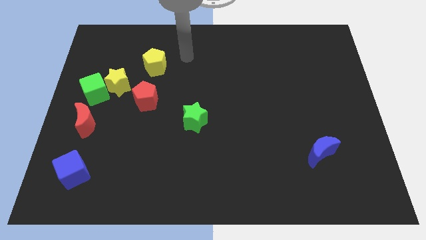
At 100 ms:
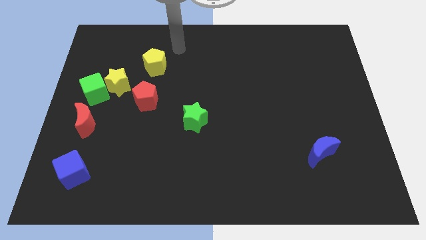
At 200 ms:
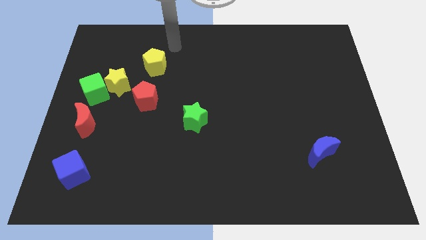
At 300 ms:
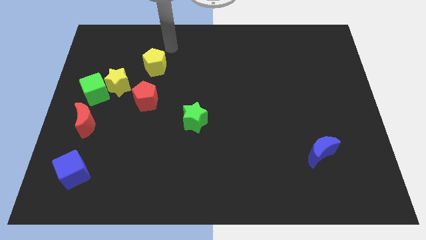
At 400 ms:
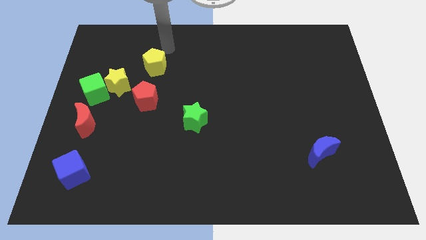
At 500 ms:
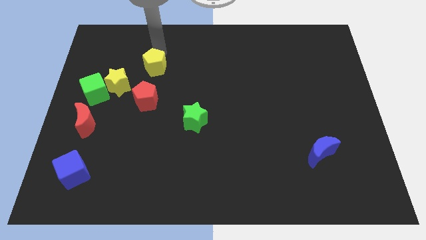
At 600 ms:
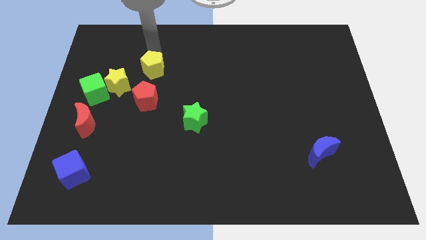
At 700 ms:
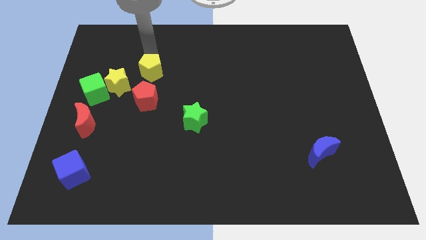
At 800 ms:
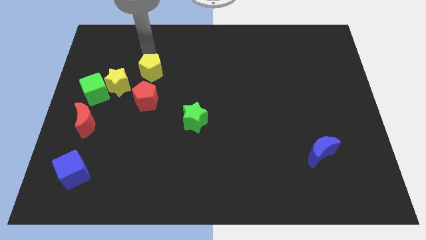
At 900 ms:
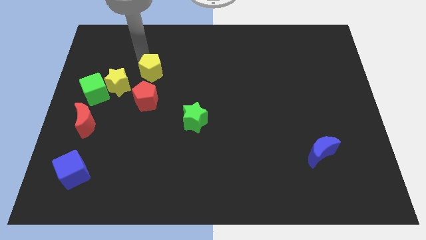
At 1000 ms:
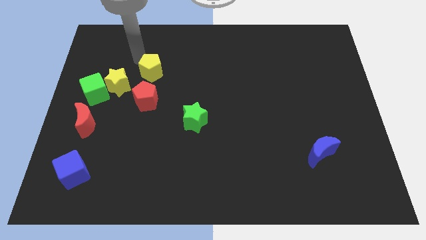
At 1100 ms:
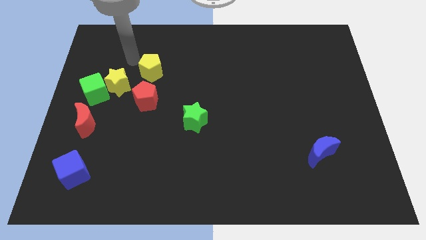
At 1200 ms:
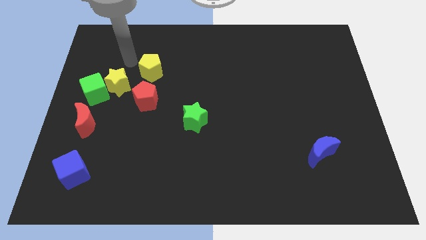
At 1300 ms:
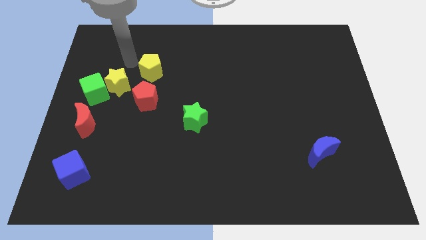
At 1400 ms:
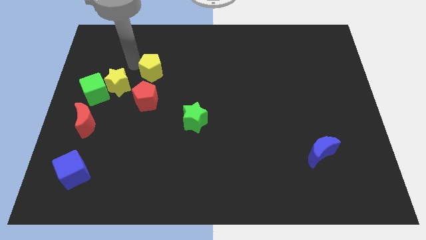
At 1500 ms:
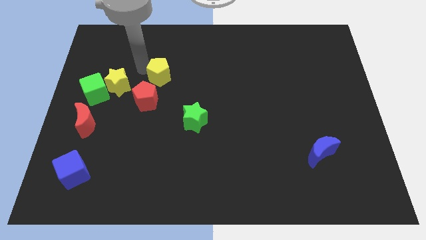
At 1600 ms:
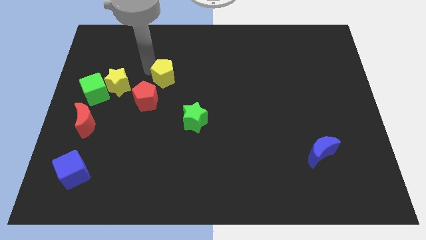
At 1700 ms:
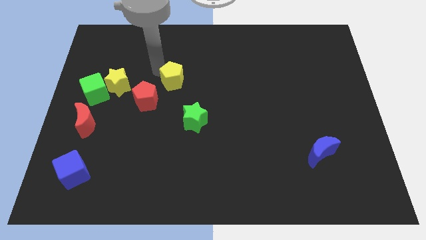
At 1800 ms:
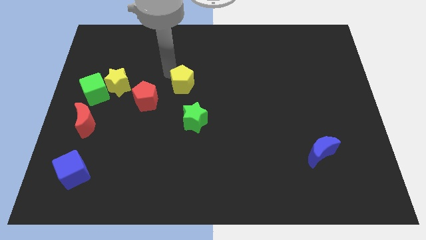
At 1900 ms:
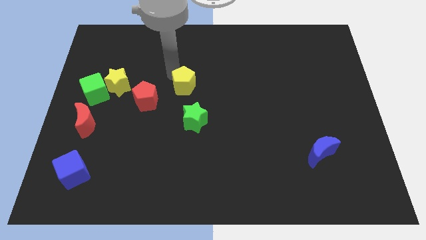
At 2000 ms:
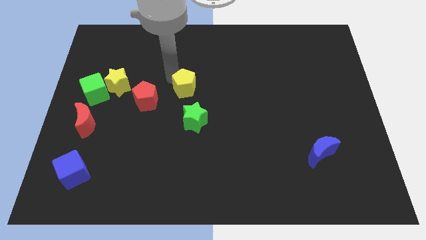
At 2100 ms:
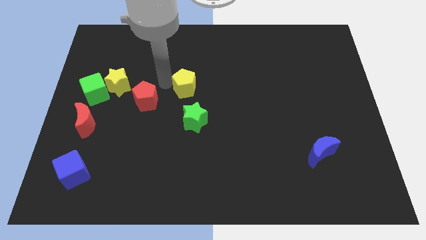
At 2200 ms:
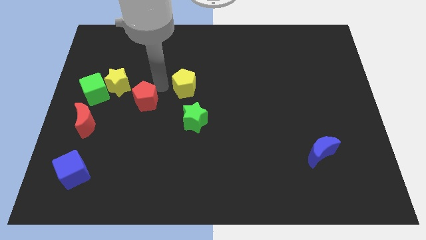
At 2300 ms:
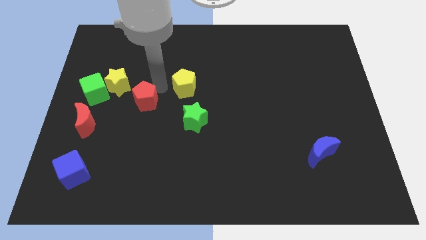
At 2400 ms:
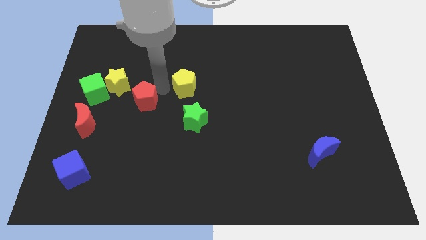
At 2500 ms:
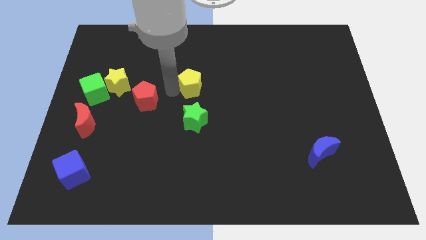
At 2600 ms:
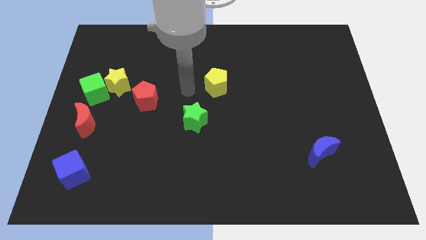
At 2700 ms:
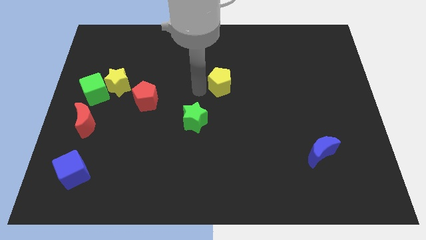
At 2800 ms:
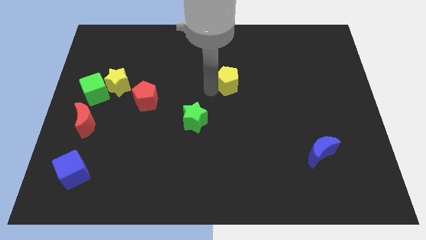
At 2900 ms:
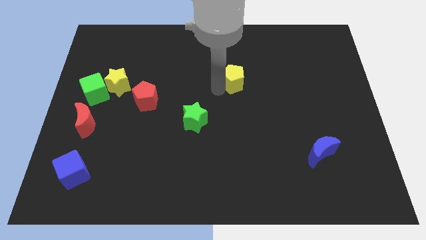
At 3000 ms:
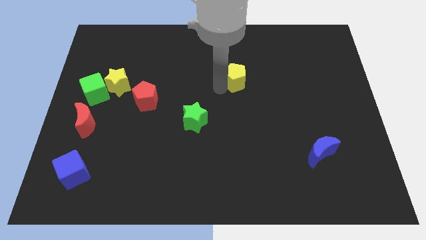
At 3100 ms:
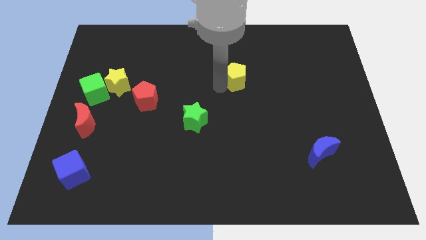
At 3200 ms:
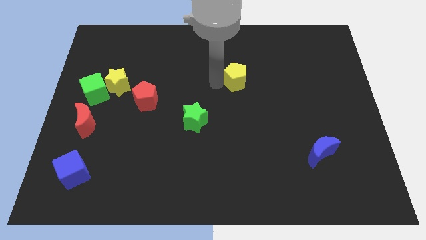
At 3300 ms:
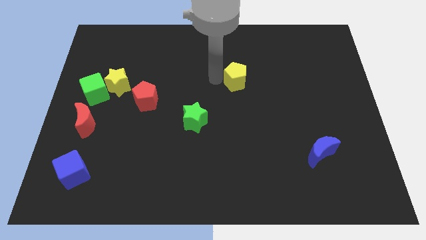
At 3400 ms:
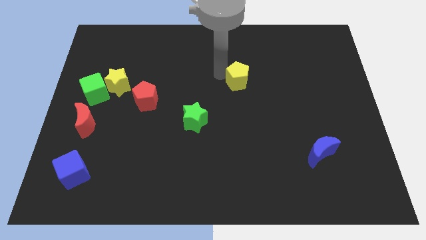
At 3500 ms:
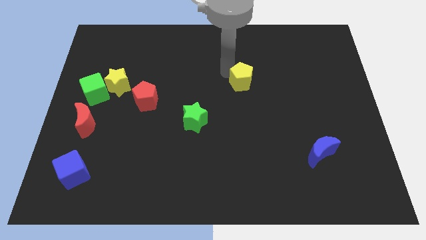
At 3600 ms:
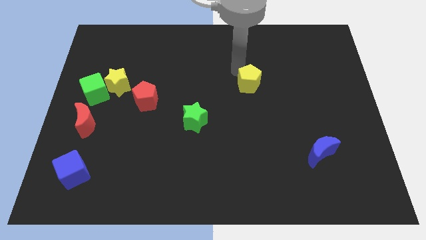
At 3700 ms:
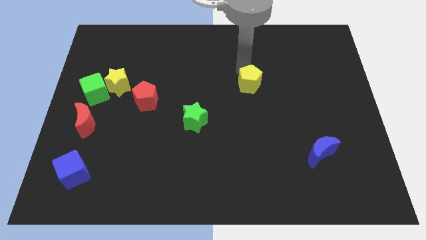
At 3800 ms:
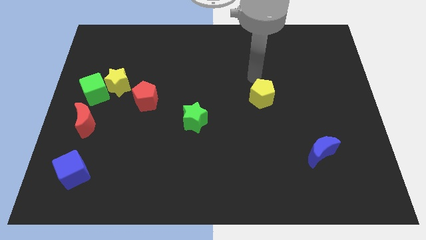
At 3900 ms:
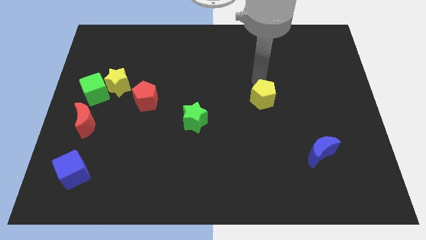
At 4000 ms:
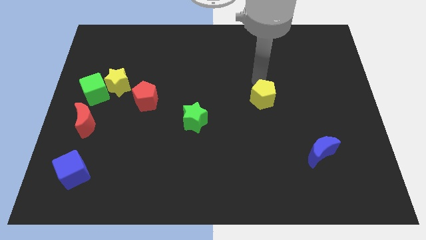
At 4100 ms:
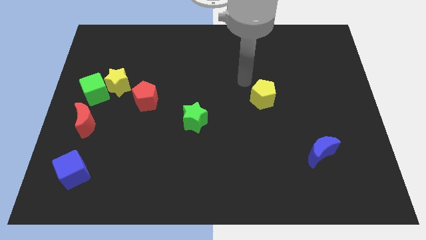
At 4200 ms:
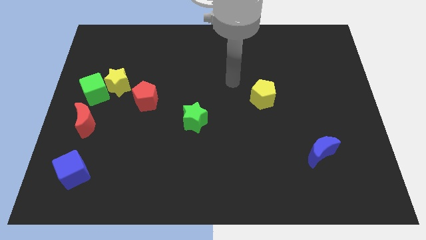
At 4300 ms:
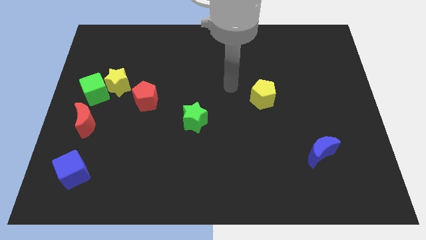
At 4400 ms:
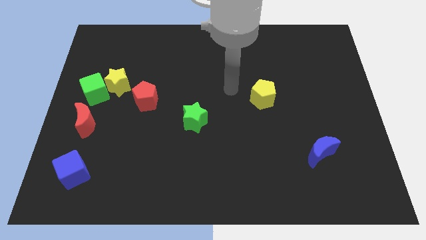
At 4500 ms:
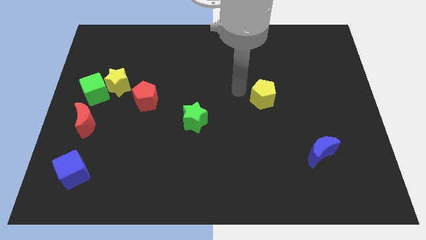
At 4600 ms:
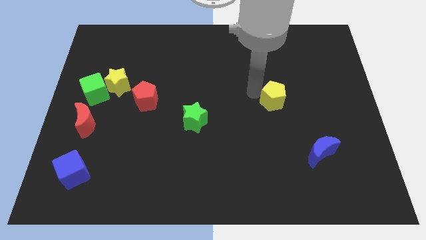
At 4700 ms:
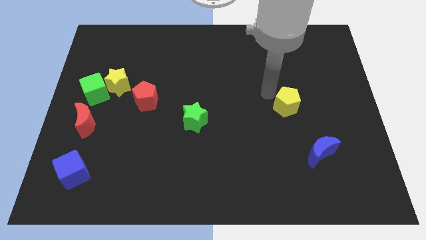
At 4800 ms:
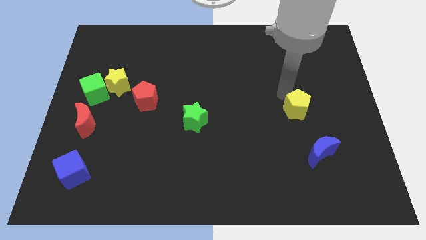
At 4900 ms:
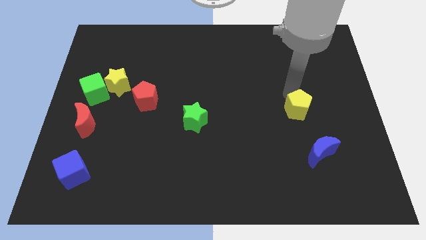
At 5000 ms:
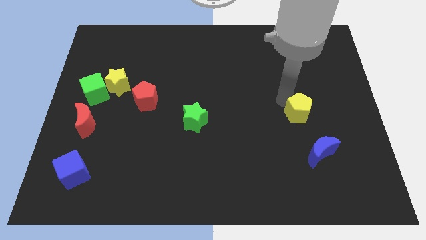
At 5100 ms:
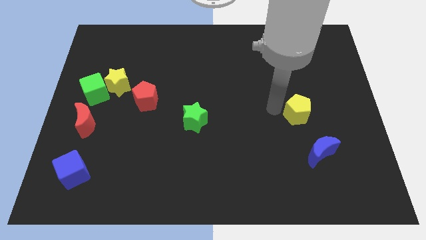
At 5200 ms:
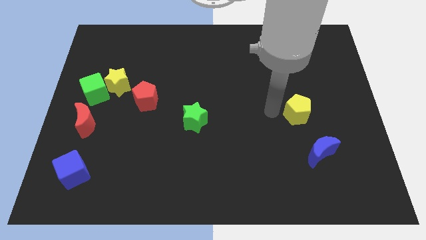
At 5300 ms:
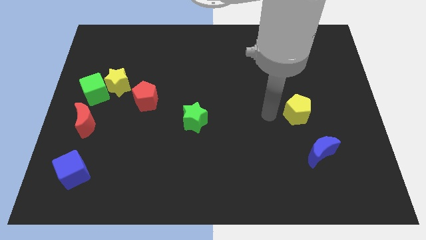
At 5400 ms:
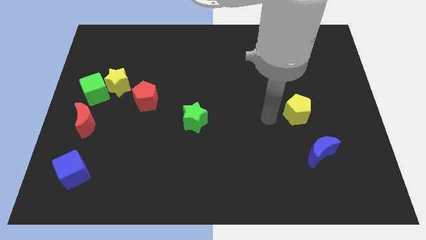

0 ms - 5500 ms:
place yellow pentagon to the right of green star

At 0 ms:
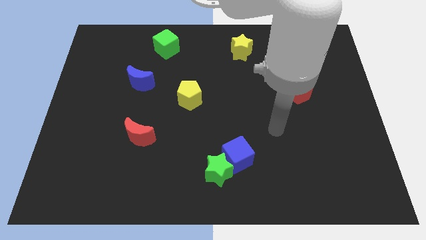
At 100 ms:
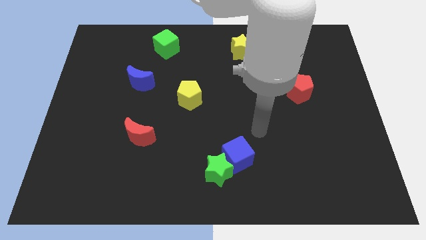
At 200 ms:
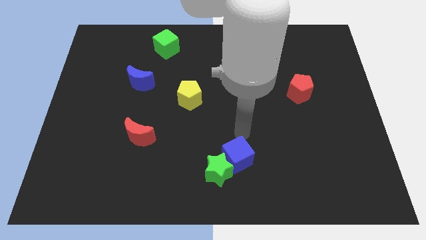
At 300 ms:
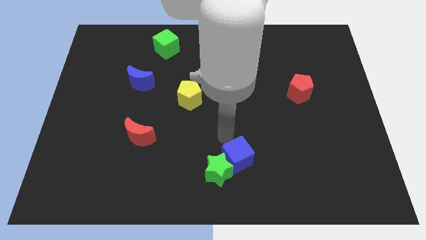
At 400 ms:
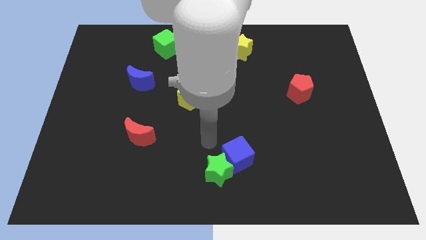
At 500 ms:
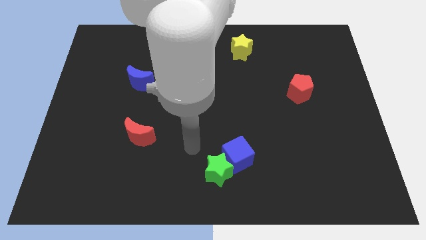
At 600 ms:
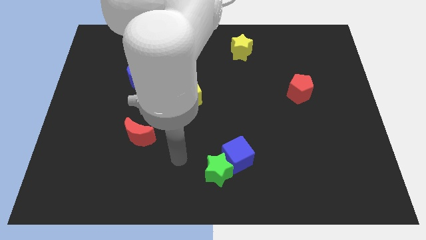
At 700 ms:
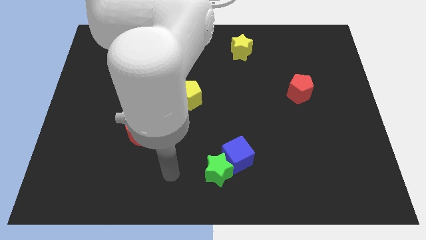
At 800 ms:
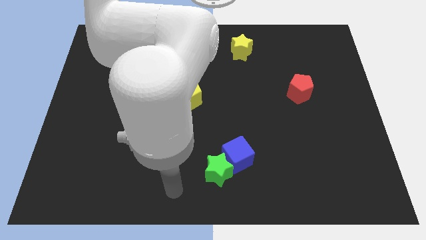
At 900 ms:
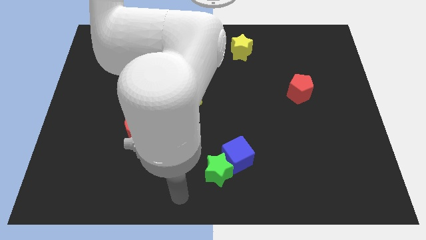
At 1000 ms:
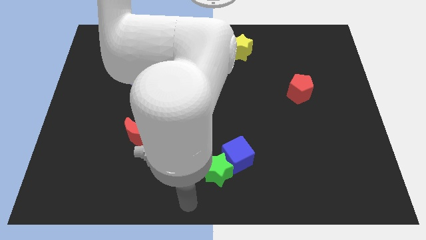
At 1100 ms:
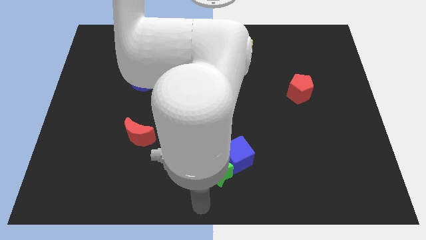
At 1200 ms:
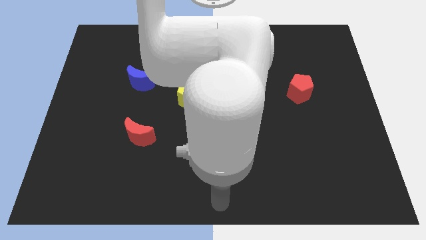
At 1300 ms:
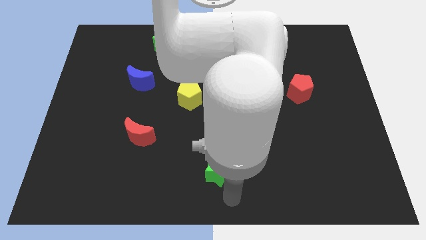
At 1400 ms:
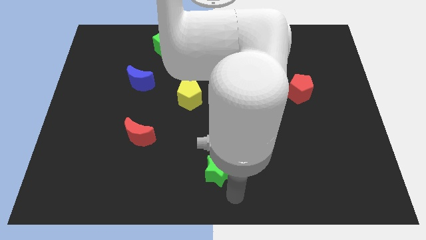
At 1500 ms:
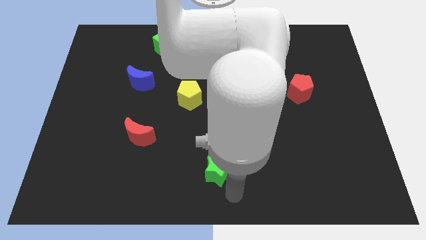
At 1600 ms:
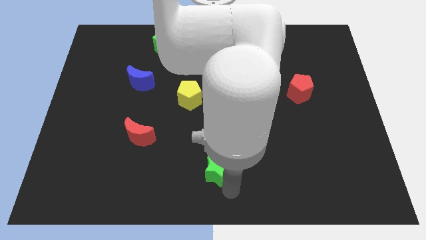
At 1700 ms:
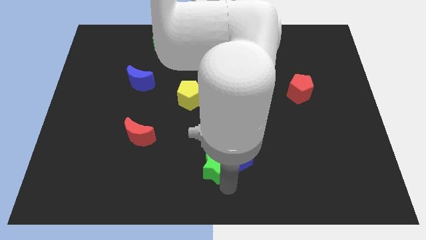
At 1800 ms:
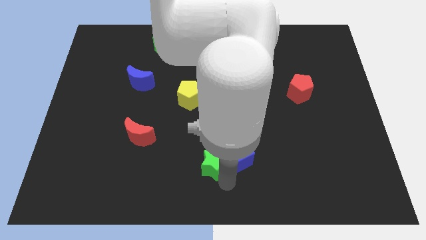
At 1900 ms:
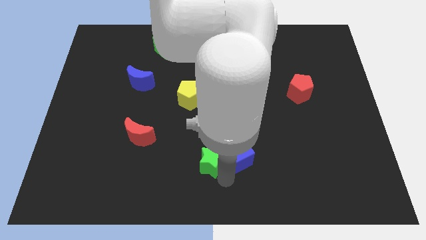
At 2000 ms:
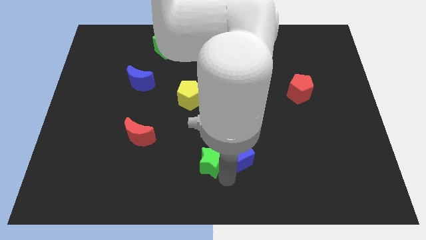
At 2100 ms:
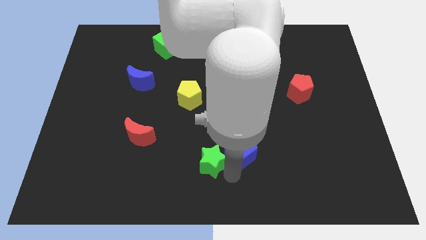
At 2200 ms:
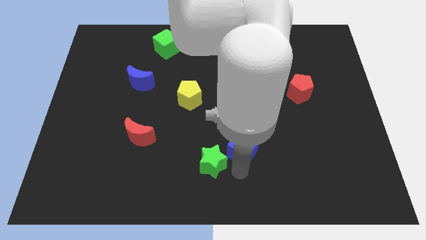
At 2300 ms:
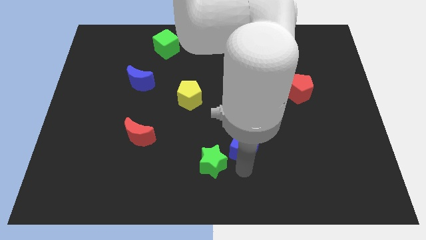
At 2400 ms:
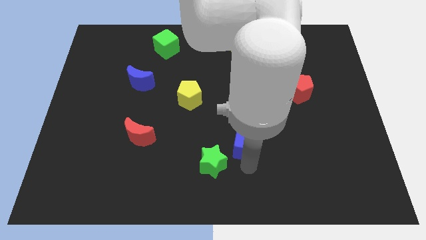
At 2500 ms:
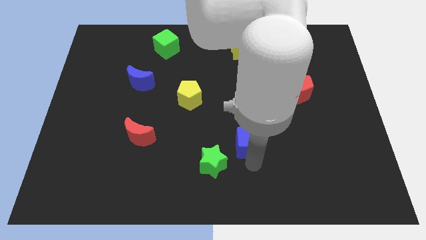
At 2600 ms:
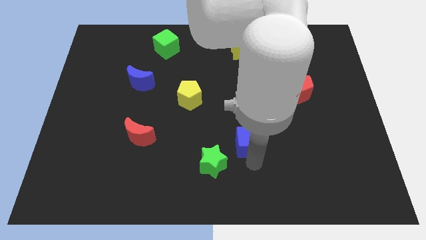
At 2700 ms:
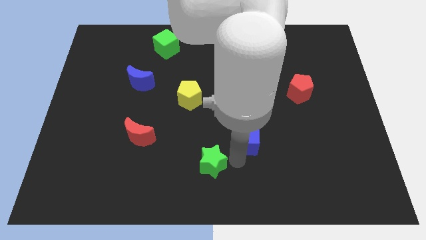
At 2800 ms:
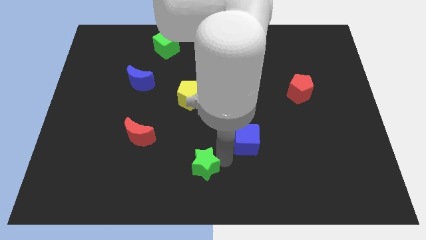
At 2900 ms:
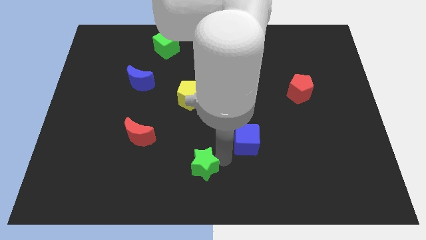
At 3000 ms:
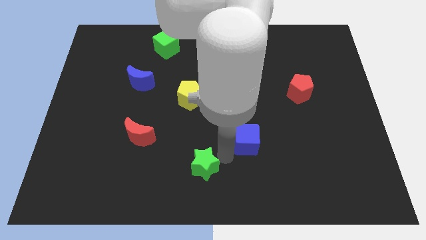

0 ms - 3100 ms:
slightly move the green star diagonally down

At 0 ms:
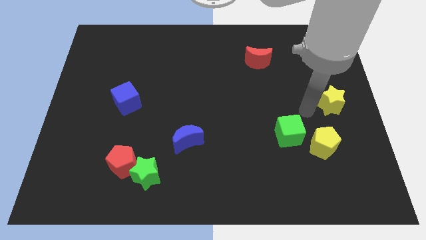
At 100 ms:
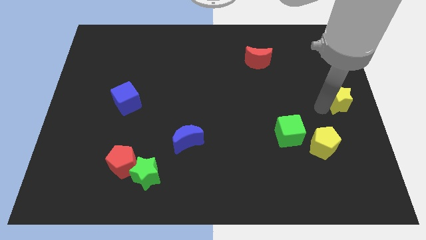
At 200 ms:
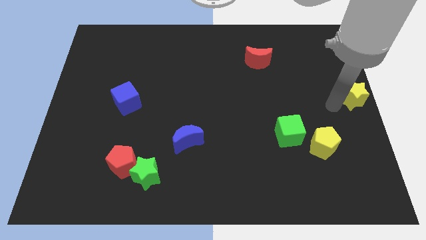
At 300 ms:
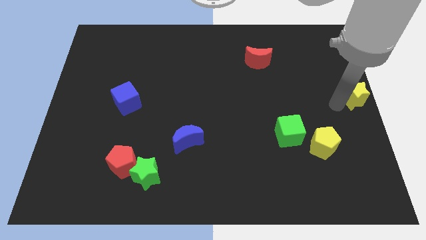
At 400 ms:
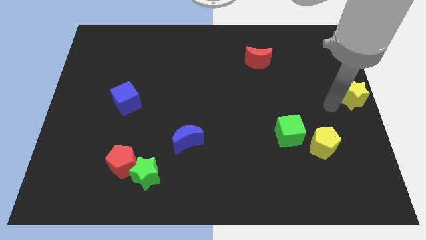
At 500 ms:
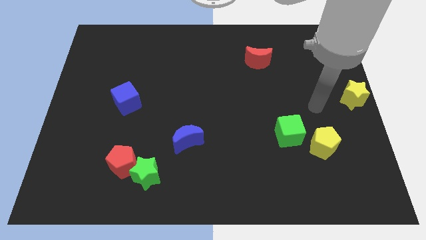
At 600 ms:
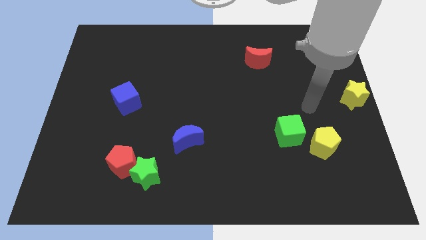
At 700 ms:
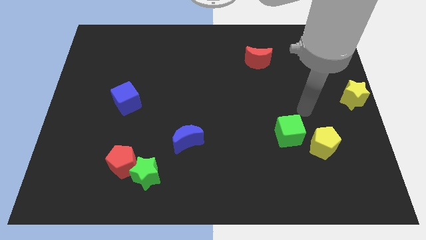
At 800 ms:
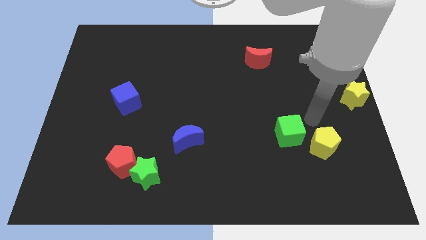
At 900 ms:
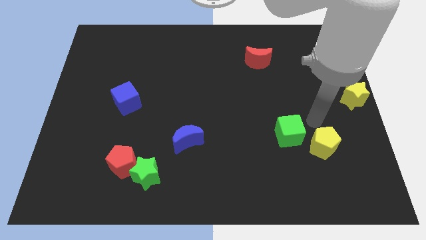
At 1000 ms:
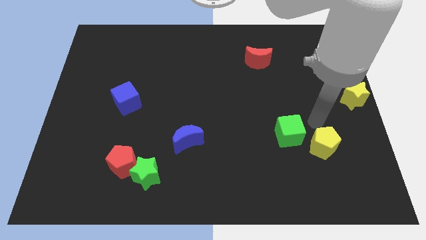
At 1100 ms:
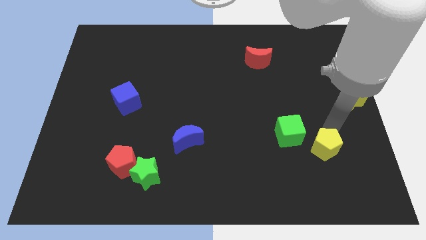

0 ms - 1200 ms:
move the yellow star to the right center of the board
